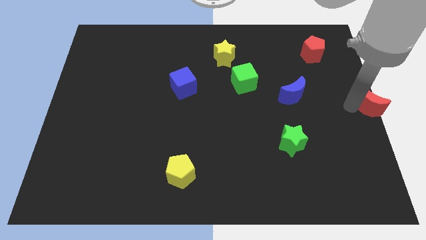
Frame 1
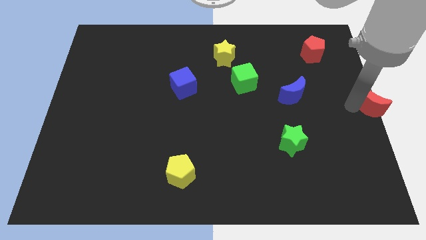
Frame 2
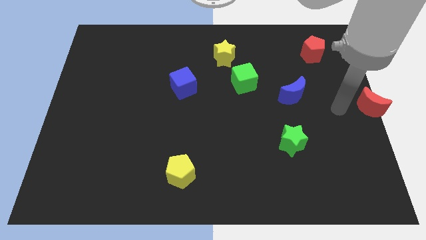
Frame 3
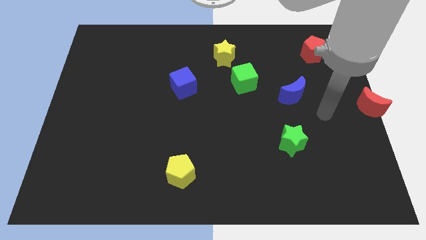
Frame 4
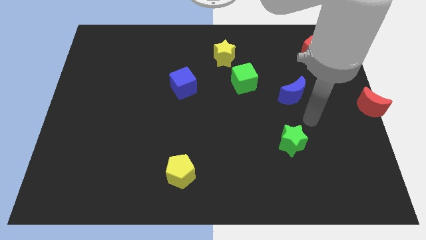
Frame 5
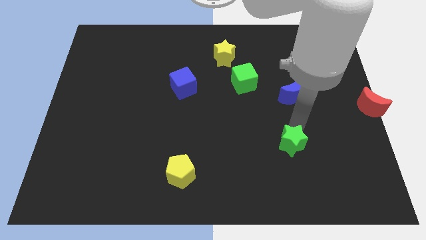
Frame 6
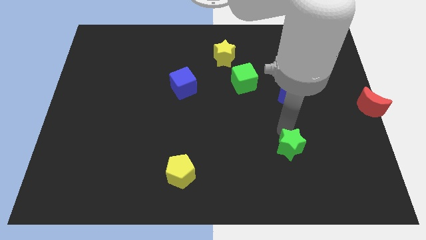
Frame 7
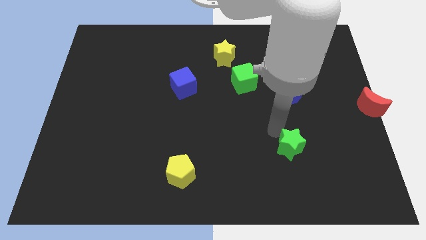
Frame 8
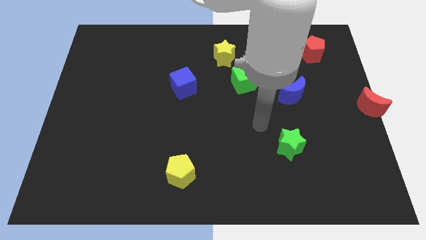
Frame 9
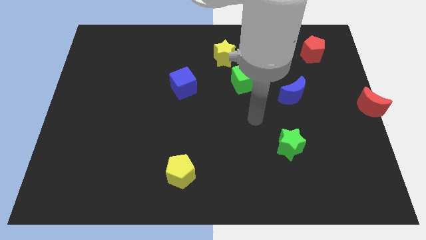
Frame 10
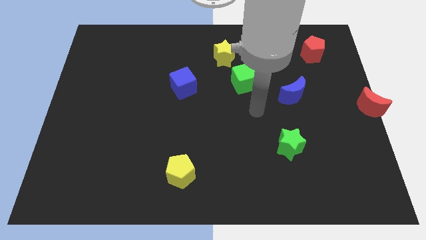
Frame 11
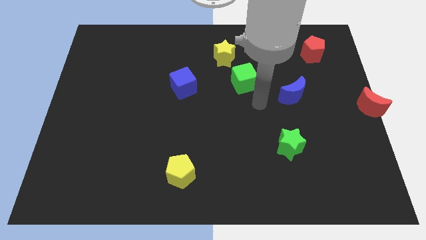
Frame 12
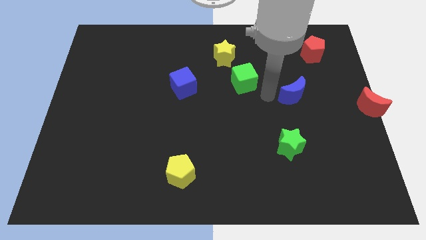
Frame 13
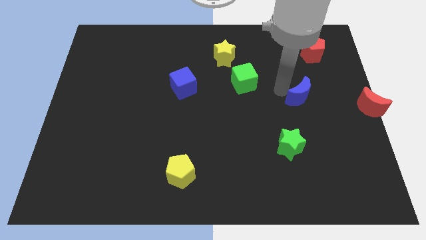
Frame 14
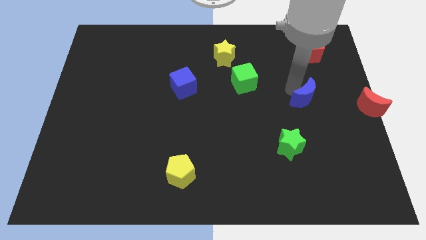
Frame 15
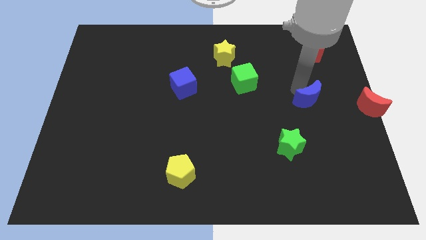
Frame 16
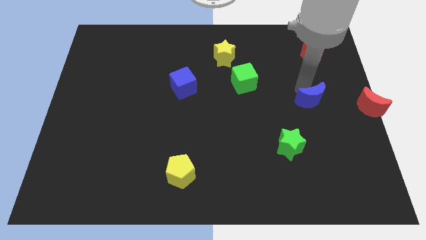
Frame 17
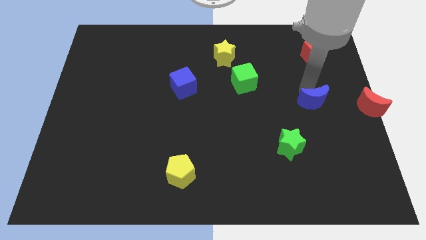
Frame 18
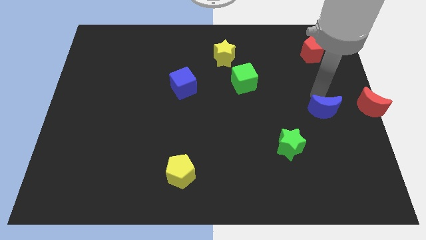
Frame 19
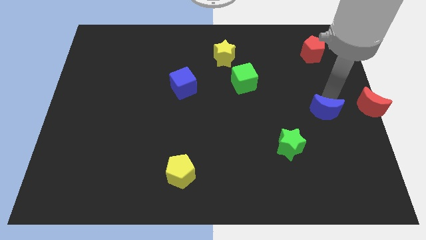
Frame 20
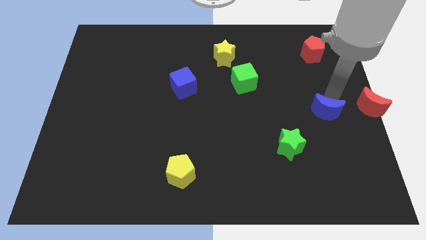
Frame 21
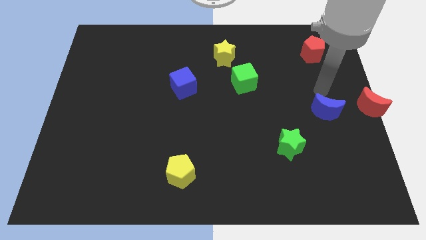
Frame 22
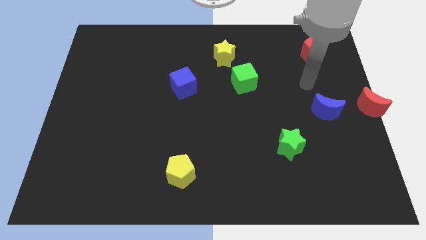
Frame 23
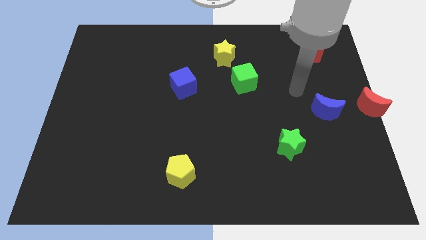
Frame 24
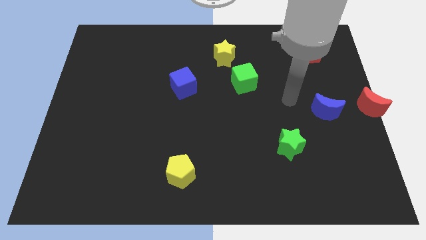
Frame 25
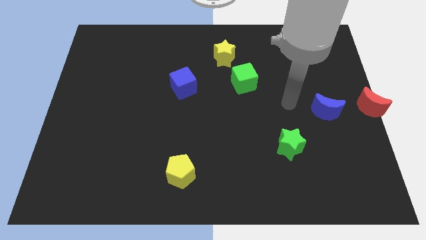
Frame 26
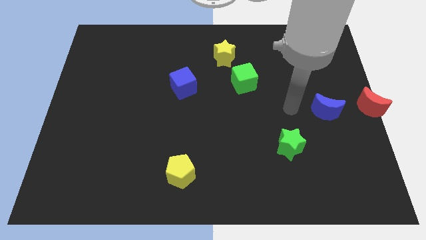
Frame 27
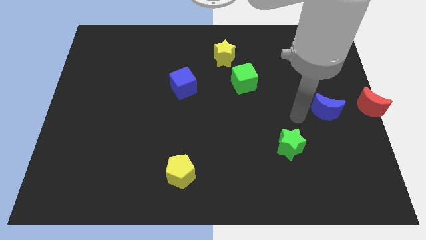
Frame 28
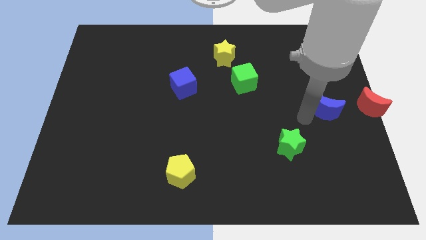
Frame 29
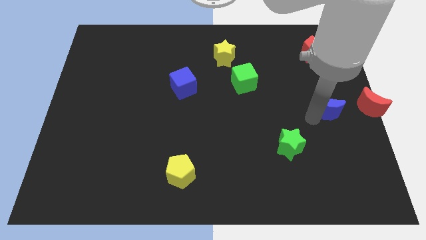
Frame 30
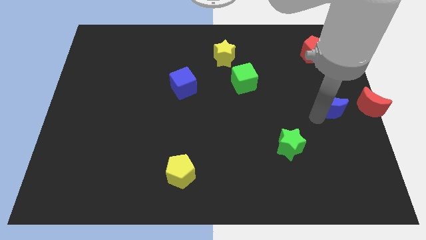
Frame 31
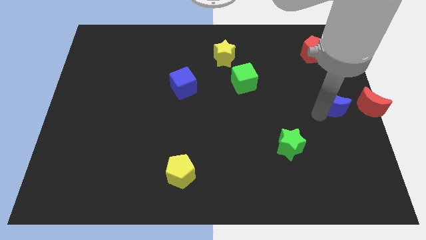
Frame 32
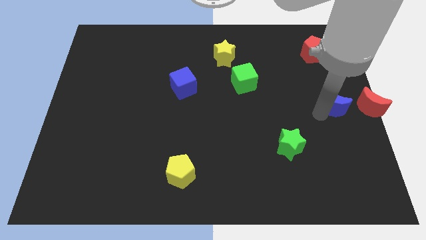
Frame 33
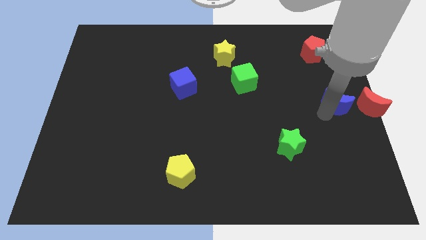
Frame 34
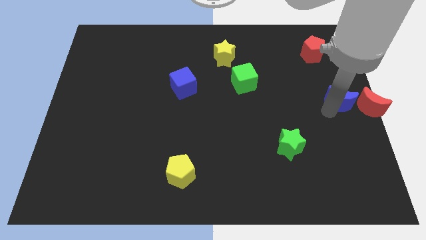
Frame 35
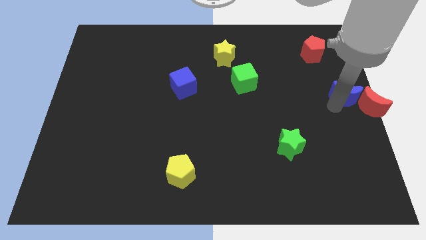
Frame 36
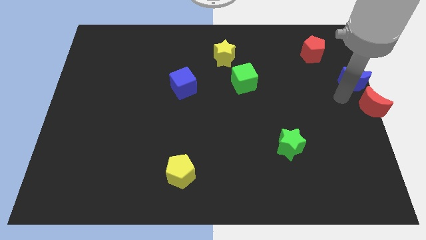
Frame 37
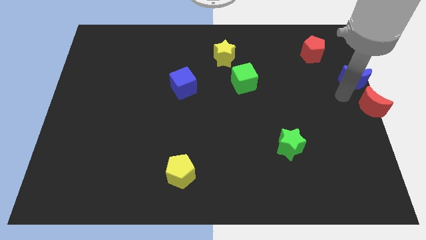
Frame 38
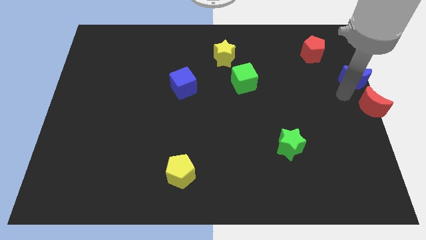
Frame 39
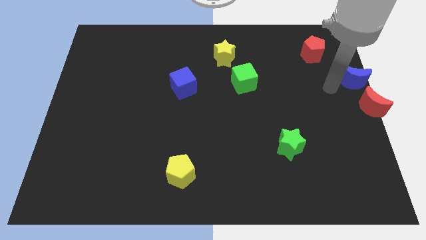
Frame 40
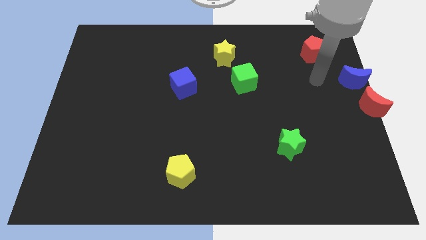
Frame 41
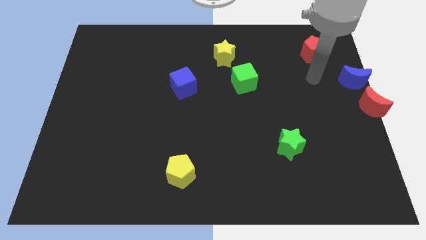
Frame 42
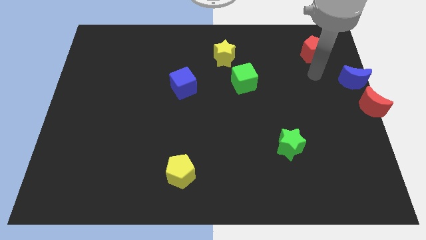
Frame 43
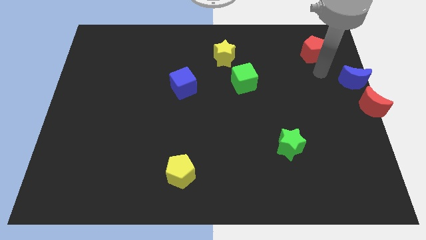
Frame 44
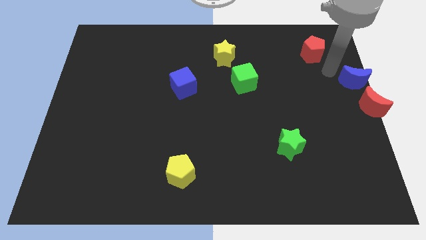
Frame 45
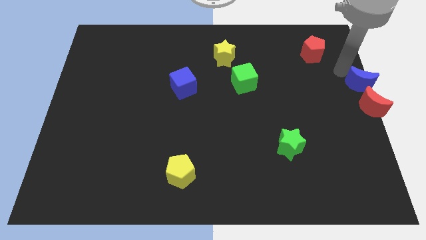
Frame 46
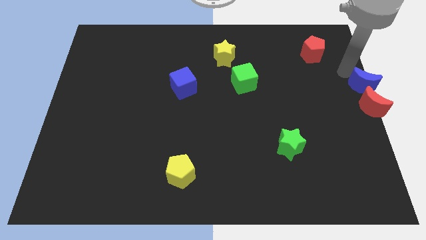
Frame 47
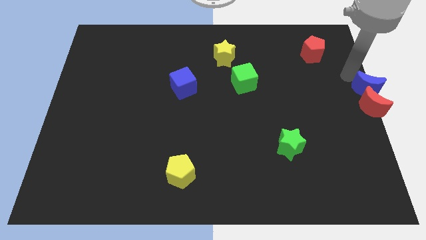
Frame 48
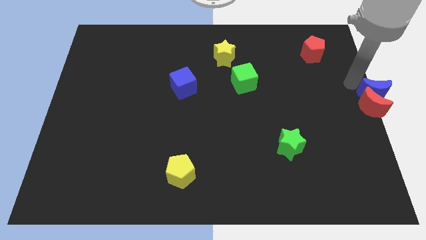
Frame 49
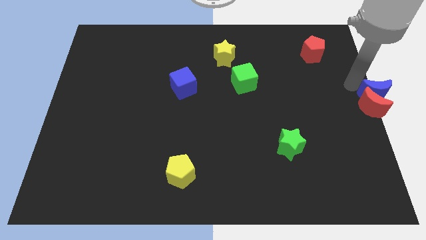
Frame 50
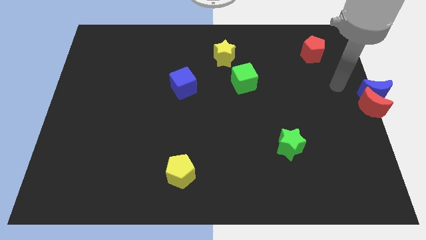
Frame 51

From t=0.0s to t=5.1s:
push the blue crescent to the right side center and above the red crescent

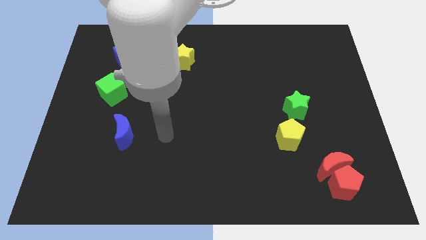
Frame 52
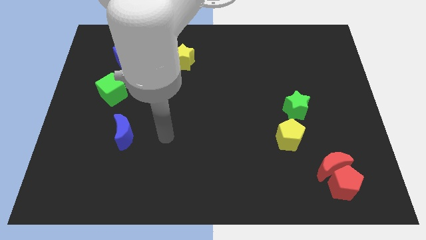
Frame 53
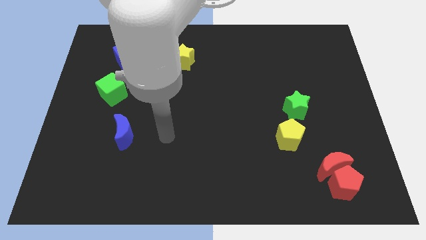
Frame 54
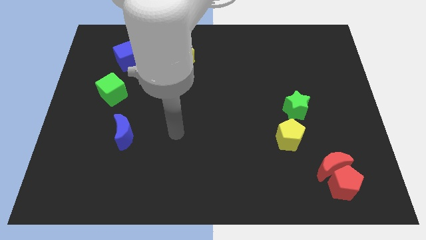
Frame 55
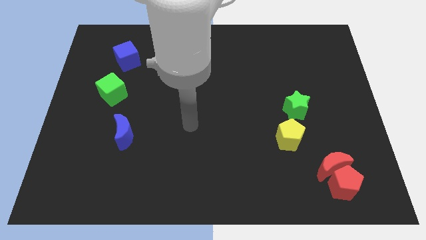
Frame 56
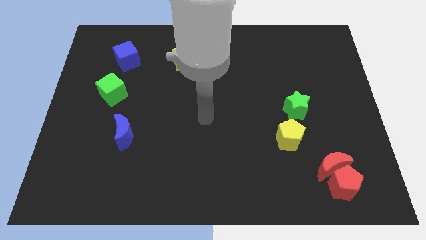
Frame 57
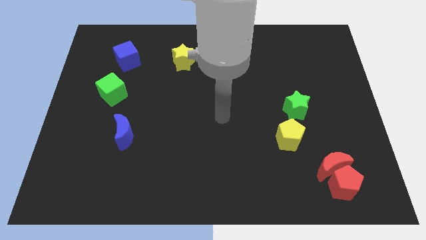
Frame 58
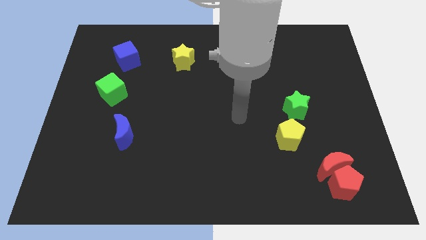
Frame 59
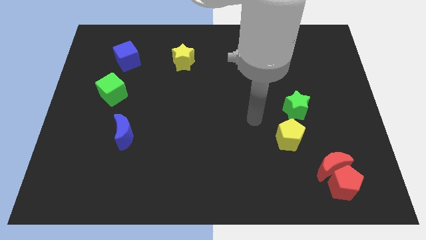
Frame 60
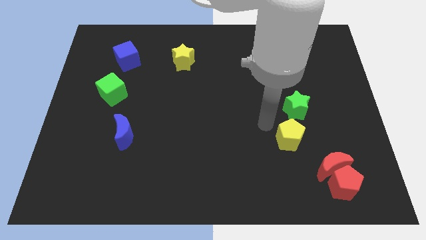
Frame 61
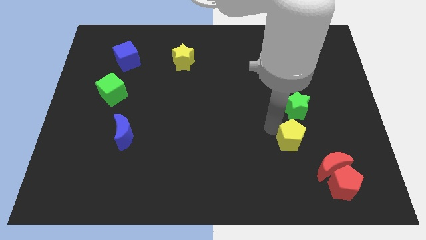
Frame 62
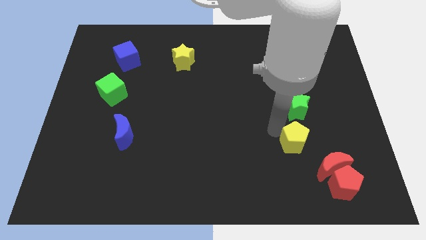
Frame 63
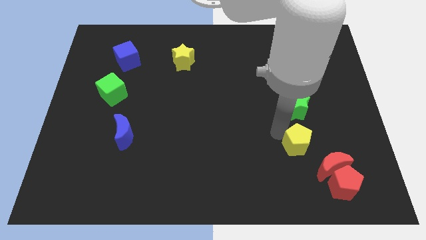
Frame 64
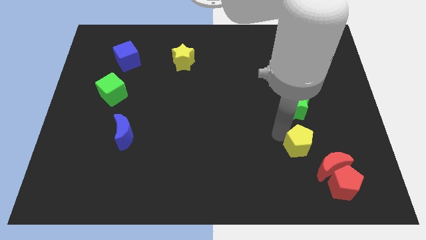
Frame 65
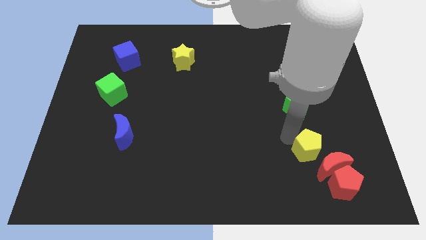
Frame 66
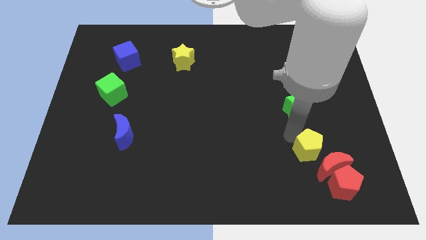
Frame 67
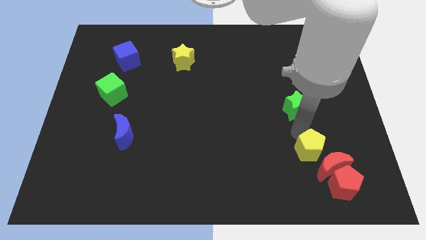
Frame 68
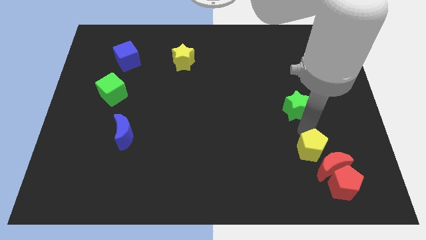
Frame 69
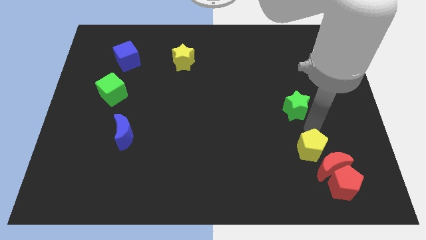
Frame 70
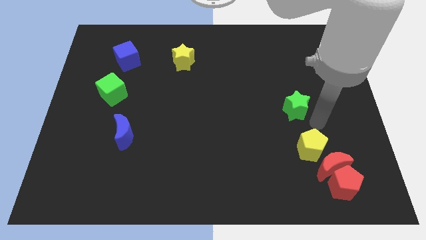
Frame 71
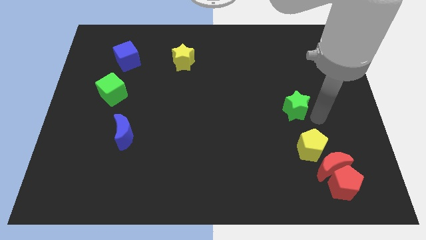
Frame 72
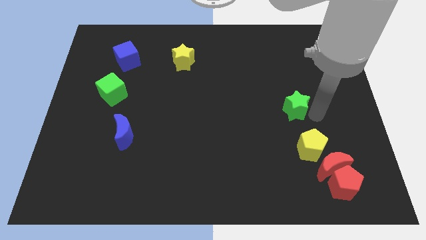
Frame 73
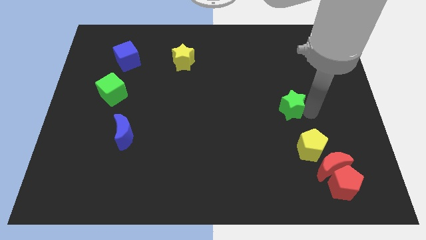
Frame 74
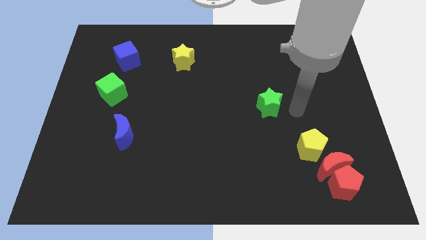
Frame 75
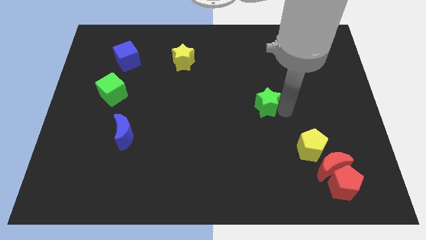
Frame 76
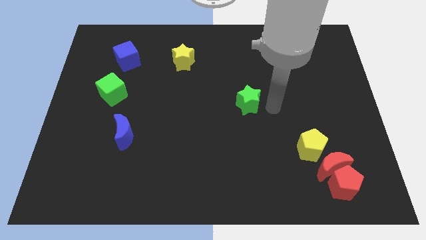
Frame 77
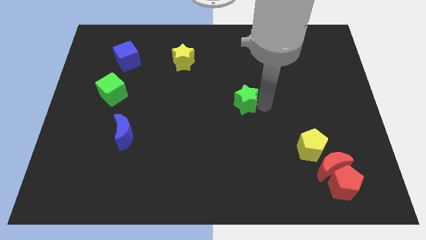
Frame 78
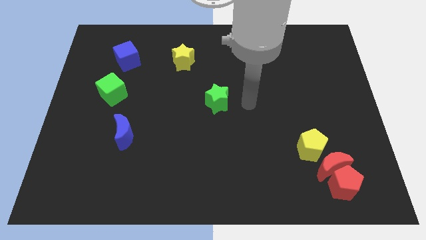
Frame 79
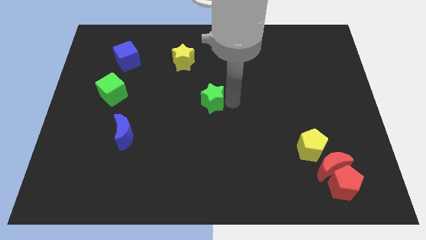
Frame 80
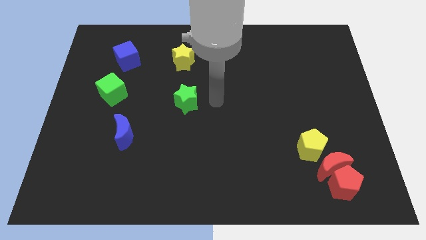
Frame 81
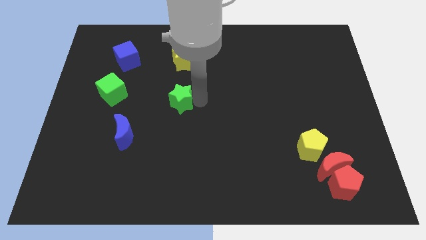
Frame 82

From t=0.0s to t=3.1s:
move the green star vertically below to the yellow star

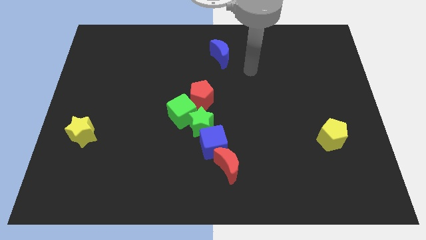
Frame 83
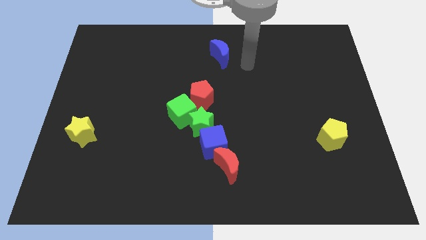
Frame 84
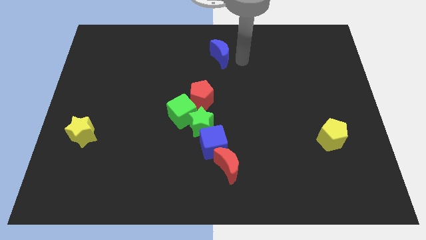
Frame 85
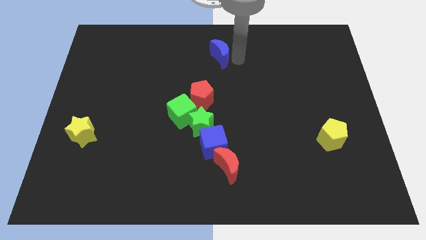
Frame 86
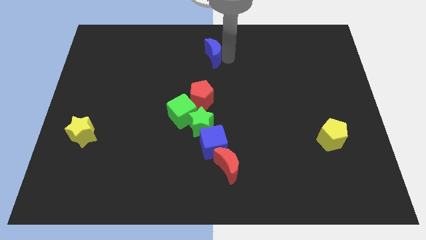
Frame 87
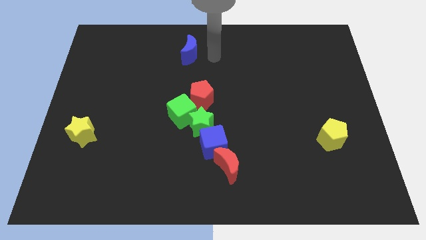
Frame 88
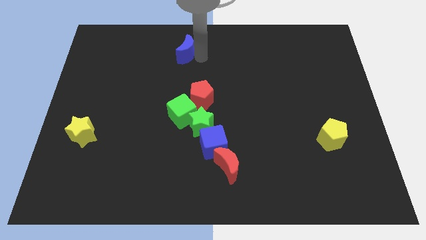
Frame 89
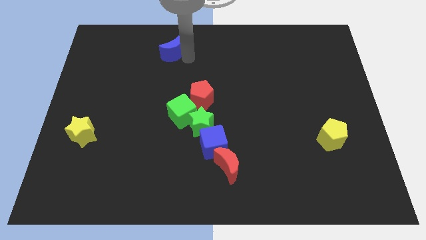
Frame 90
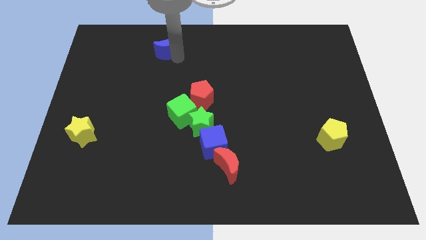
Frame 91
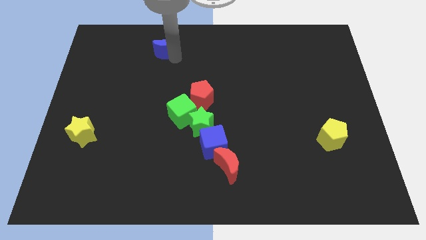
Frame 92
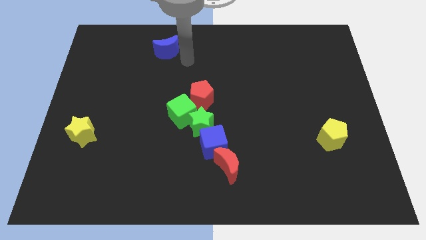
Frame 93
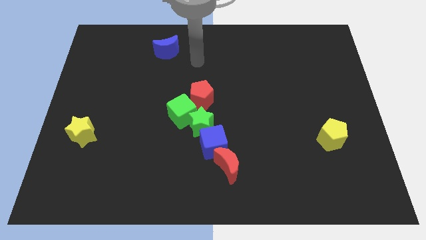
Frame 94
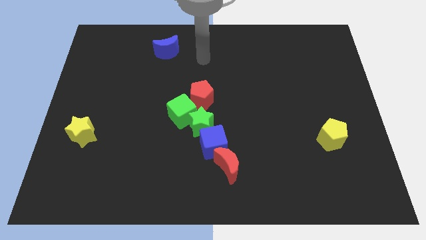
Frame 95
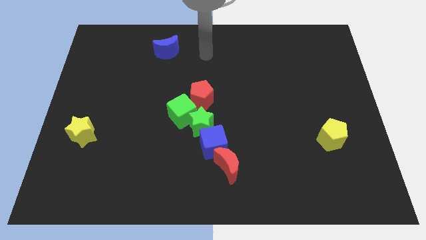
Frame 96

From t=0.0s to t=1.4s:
push the blue moon towards the left side of the board
